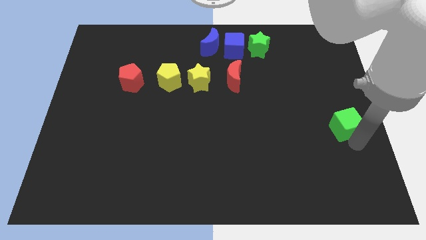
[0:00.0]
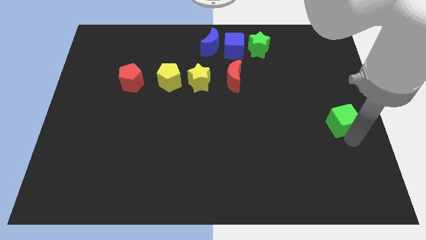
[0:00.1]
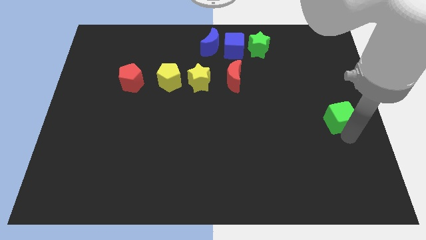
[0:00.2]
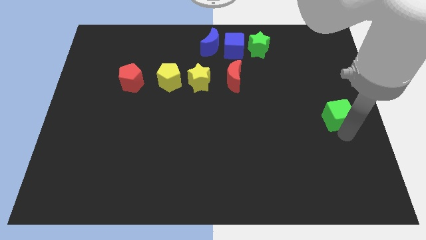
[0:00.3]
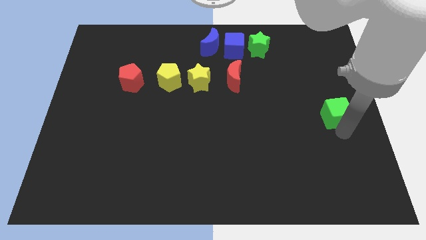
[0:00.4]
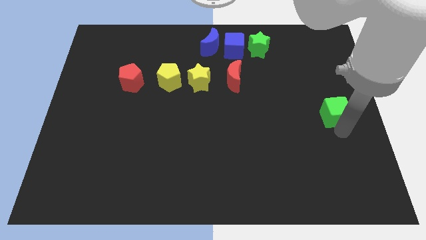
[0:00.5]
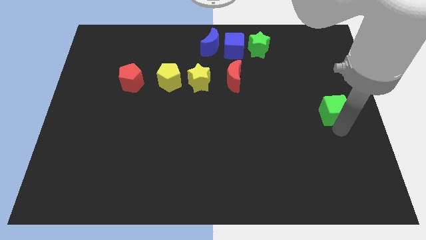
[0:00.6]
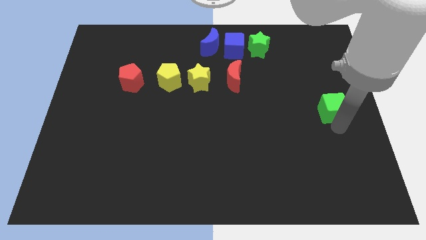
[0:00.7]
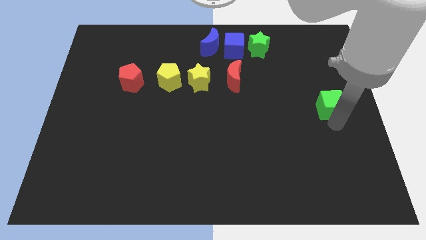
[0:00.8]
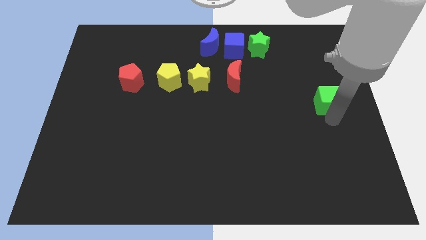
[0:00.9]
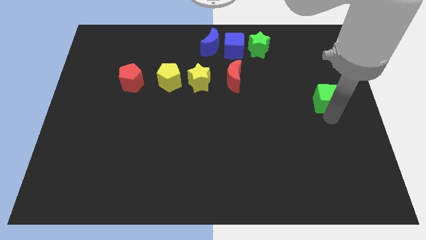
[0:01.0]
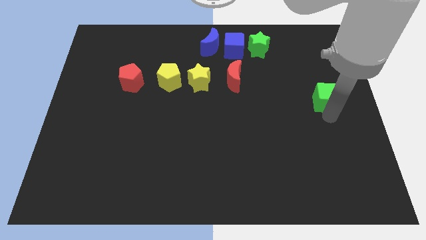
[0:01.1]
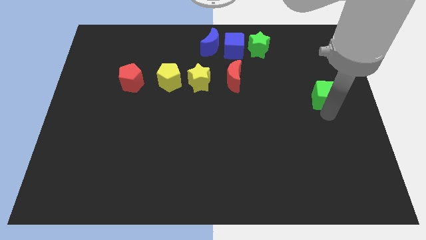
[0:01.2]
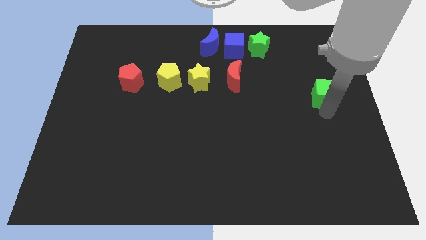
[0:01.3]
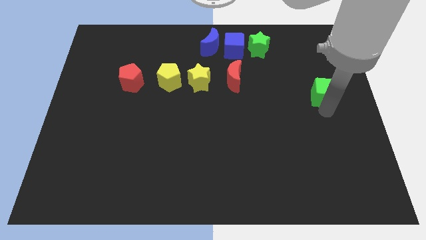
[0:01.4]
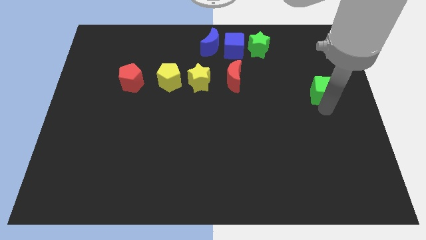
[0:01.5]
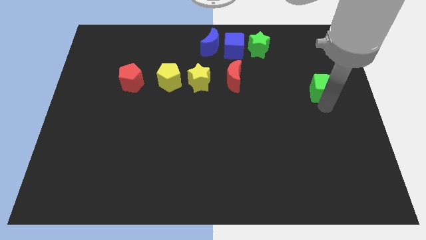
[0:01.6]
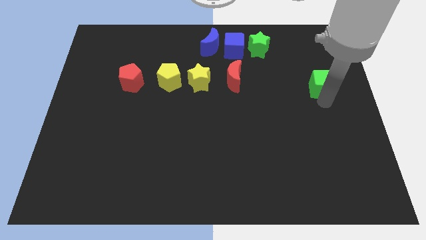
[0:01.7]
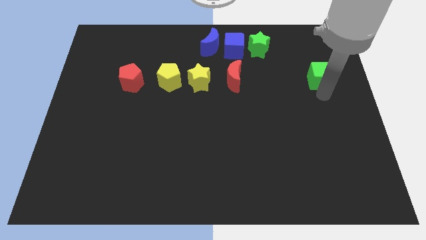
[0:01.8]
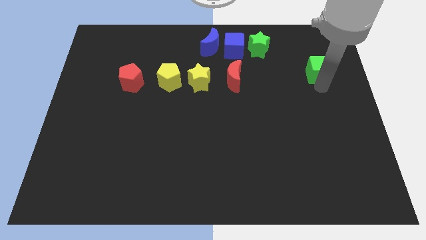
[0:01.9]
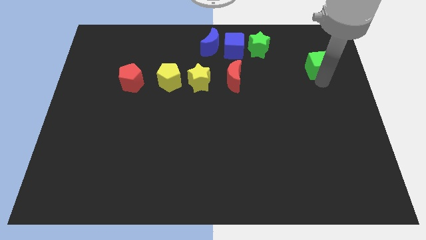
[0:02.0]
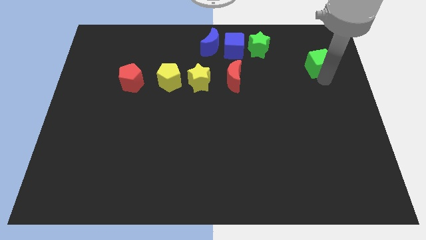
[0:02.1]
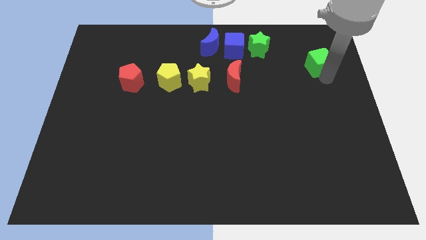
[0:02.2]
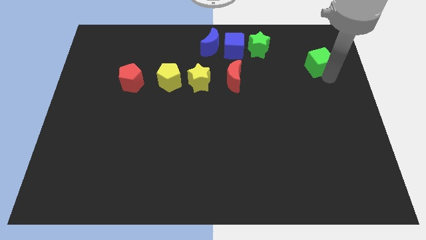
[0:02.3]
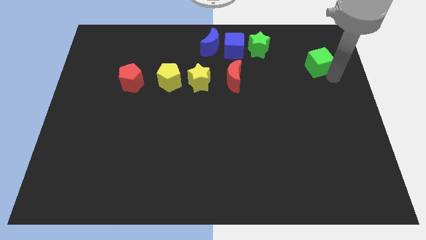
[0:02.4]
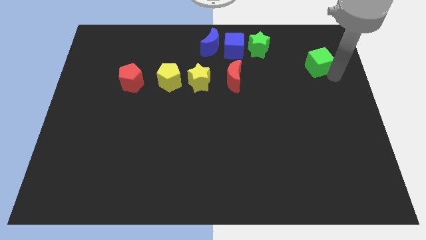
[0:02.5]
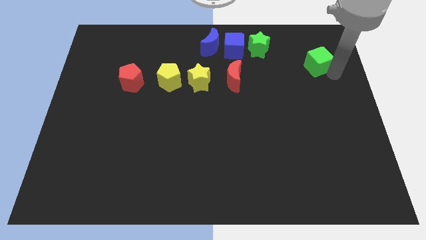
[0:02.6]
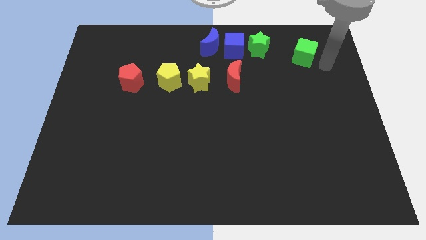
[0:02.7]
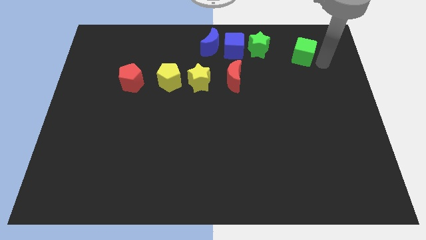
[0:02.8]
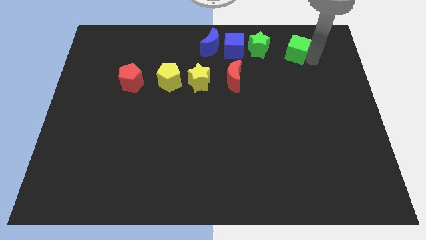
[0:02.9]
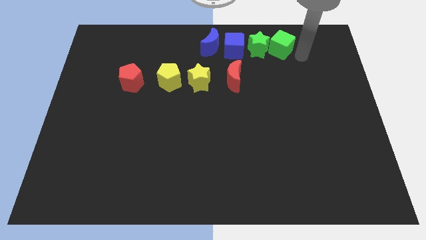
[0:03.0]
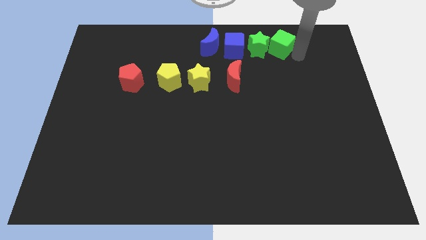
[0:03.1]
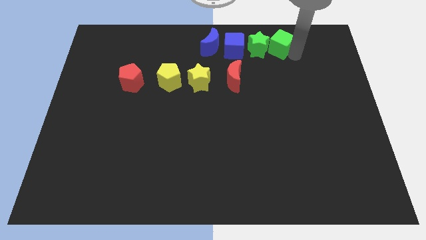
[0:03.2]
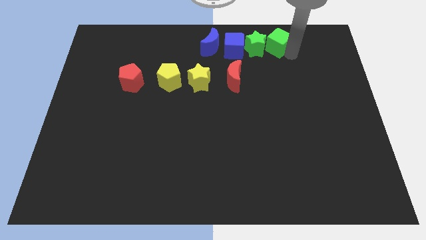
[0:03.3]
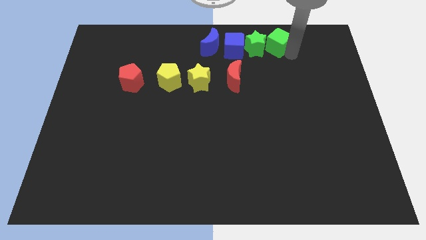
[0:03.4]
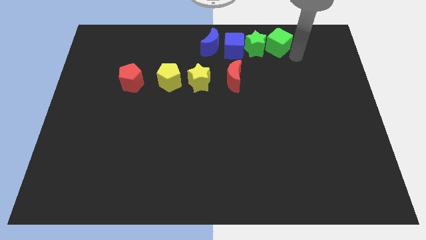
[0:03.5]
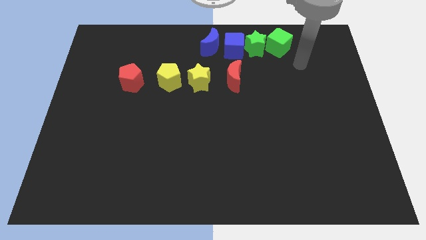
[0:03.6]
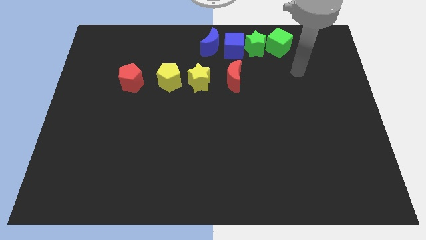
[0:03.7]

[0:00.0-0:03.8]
move the green cube to the right of the green star

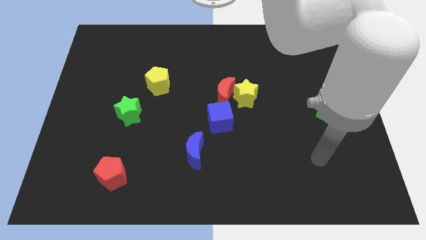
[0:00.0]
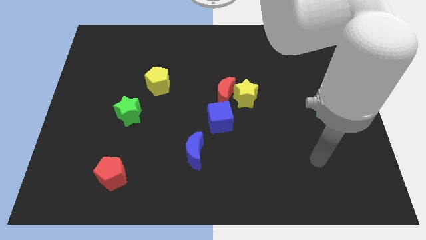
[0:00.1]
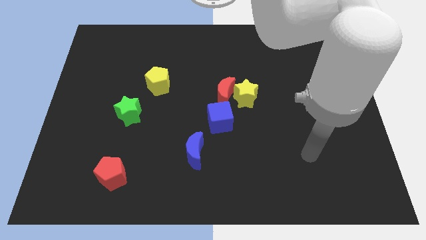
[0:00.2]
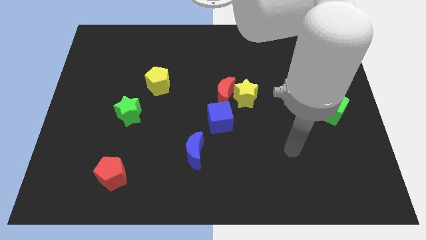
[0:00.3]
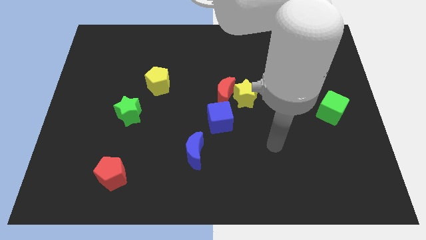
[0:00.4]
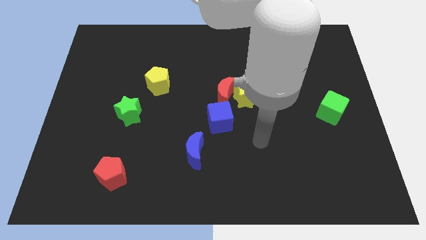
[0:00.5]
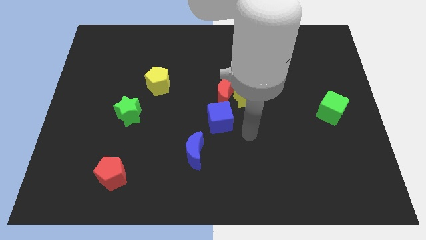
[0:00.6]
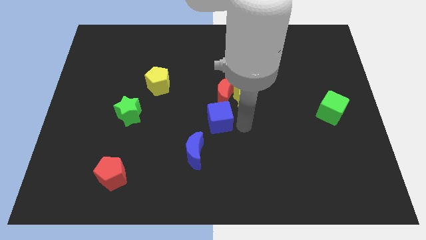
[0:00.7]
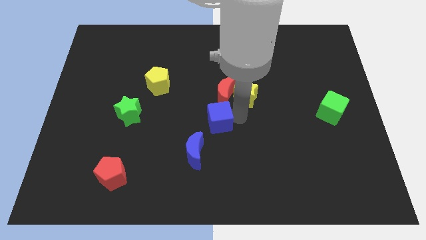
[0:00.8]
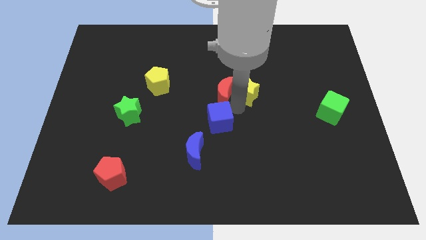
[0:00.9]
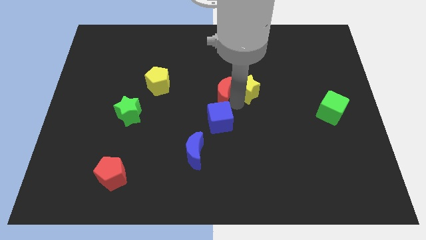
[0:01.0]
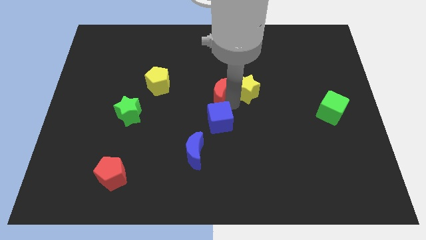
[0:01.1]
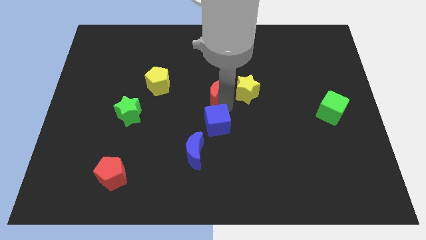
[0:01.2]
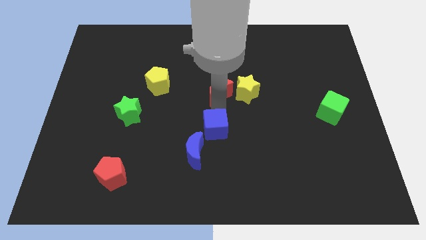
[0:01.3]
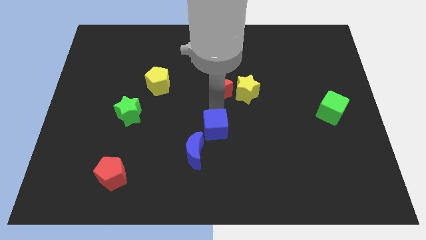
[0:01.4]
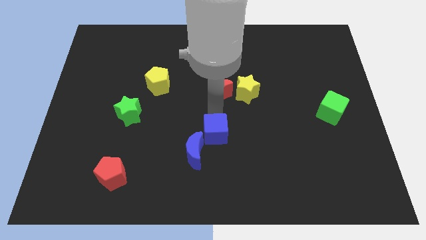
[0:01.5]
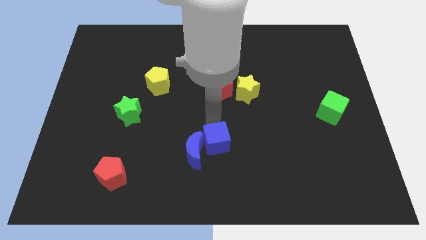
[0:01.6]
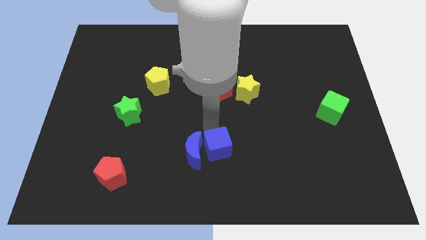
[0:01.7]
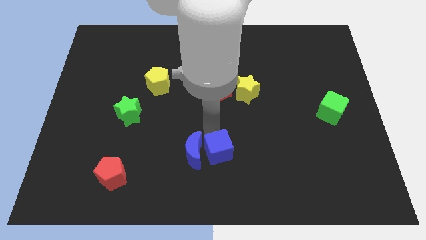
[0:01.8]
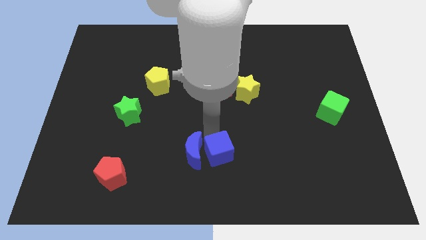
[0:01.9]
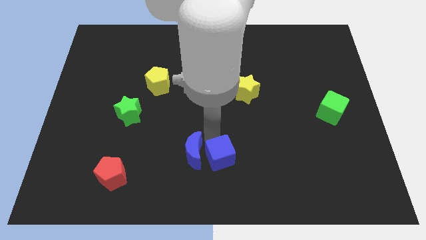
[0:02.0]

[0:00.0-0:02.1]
place the blue cube at the right side of the blue moon

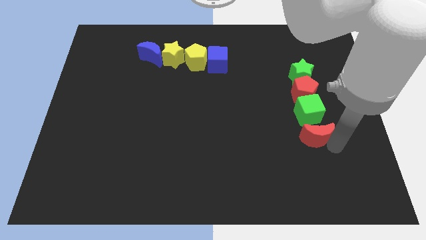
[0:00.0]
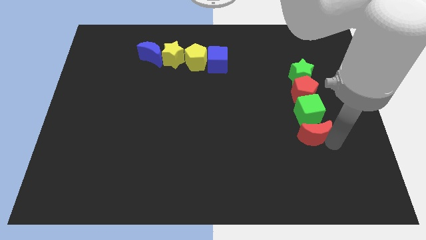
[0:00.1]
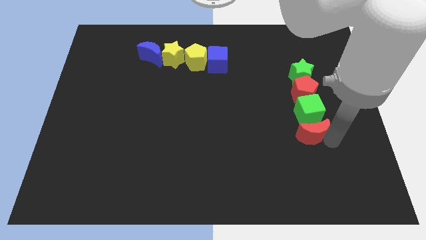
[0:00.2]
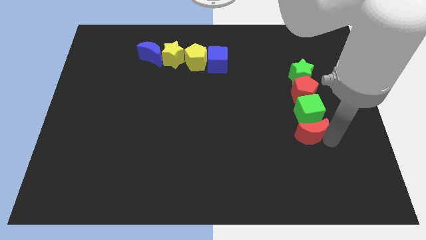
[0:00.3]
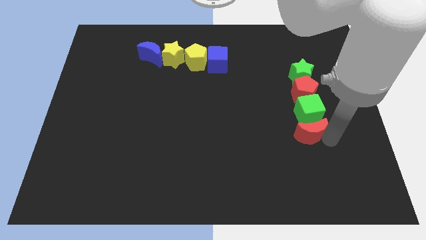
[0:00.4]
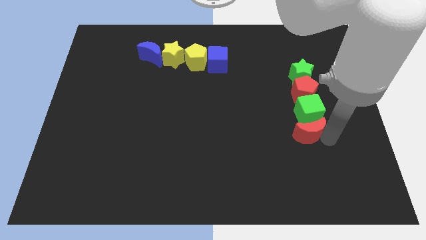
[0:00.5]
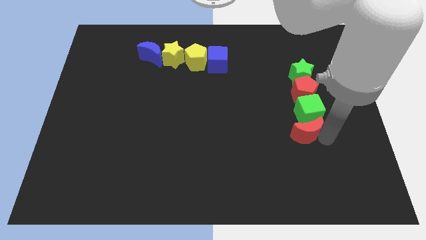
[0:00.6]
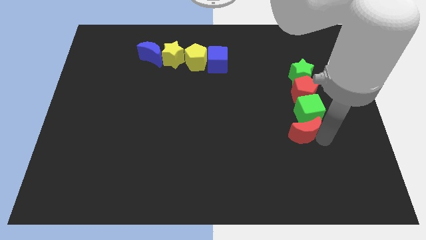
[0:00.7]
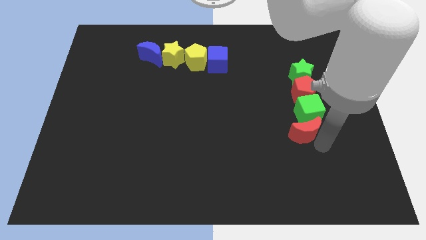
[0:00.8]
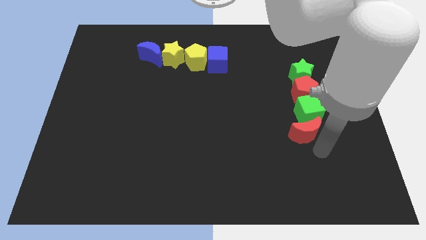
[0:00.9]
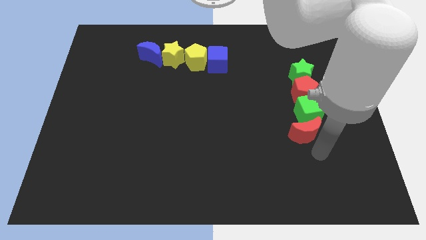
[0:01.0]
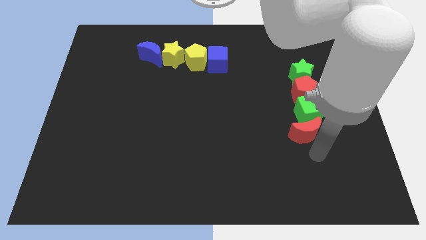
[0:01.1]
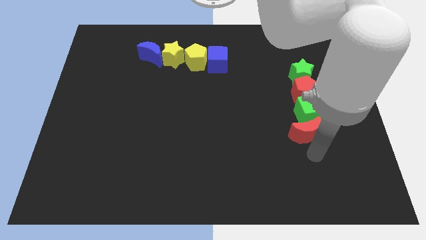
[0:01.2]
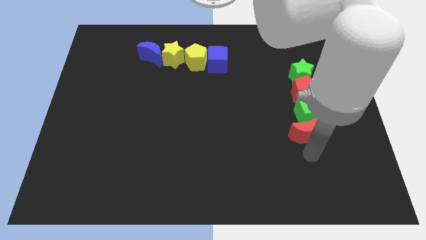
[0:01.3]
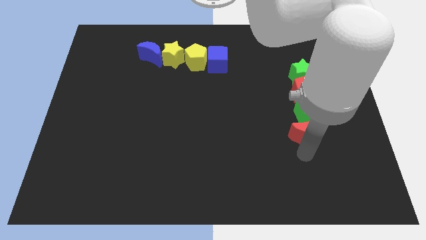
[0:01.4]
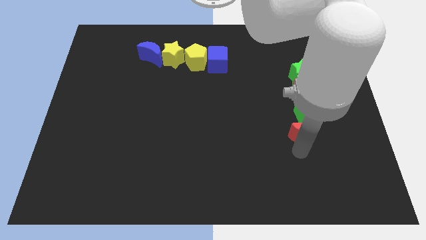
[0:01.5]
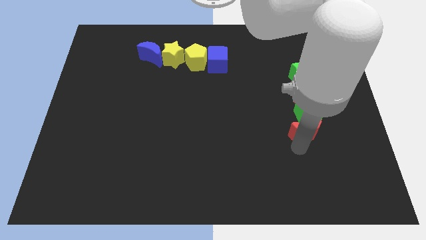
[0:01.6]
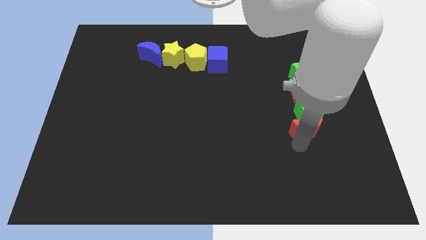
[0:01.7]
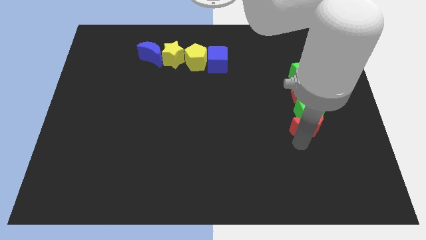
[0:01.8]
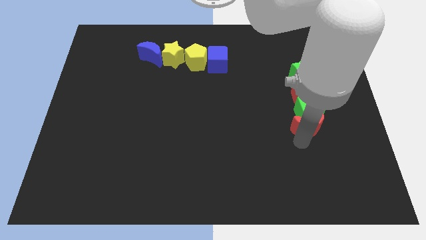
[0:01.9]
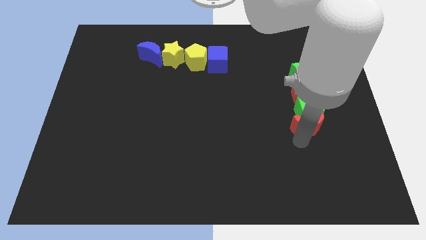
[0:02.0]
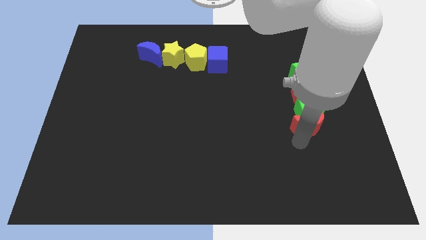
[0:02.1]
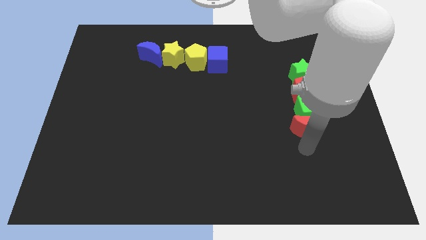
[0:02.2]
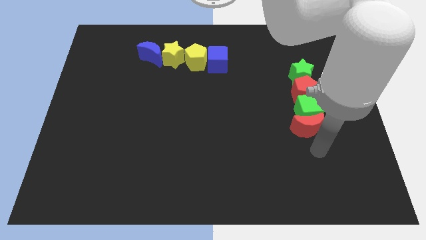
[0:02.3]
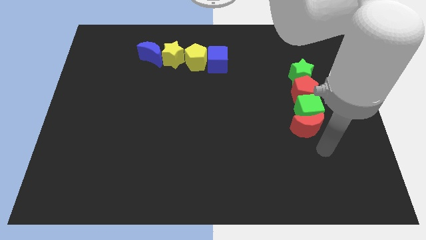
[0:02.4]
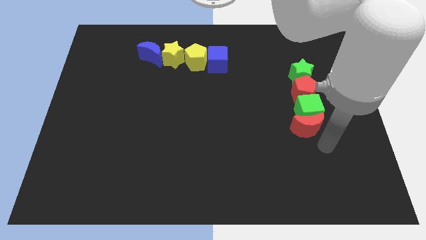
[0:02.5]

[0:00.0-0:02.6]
move the red crescent to the bottom of the green cube

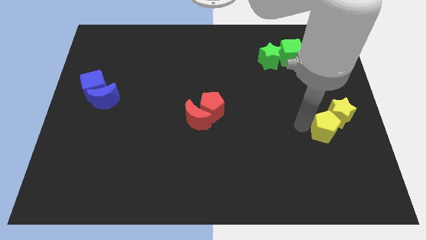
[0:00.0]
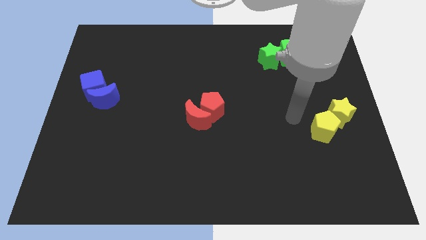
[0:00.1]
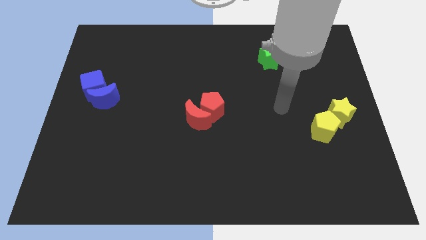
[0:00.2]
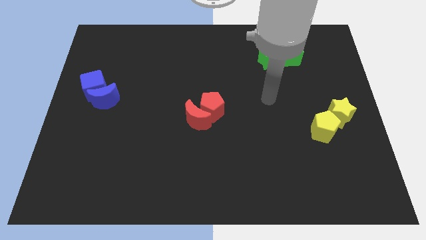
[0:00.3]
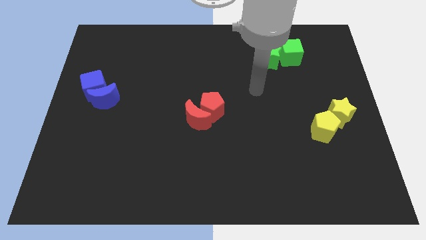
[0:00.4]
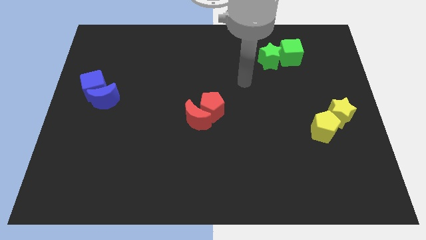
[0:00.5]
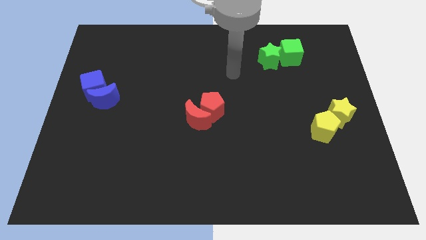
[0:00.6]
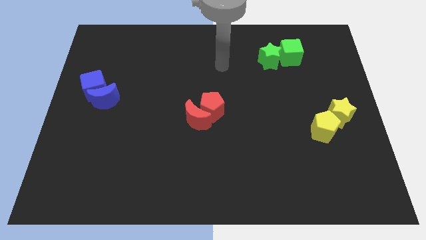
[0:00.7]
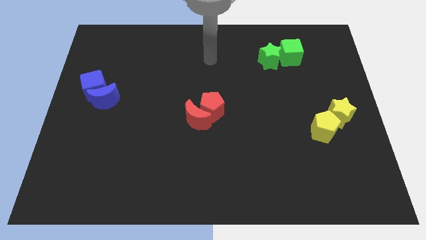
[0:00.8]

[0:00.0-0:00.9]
move the arm away from the yellow pentagon
